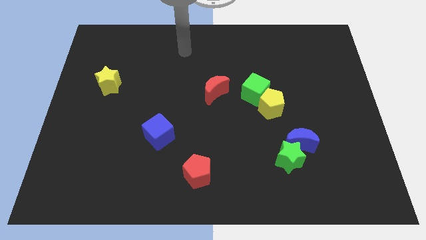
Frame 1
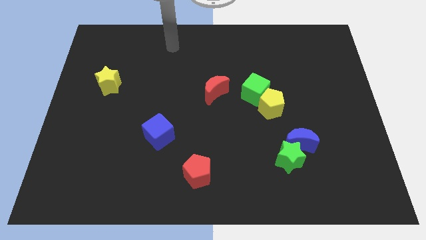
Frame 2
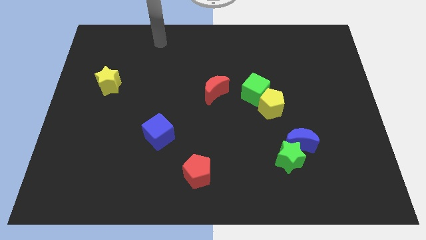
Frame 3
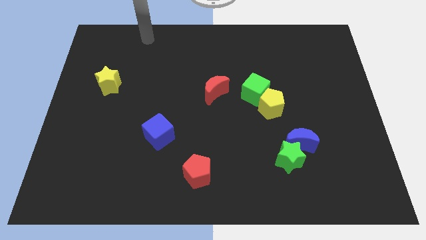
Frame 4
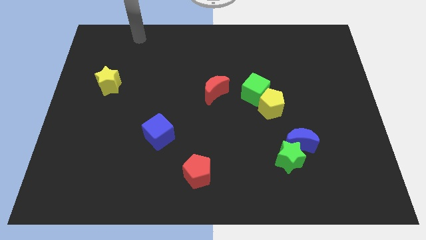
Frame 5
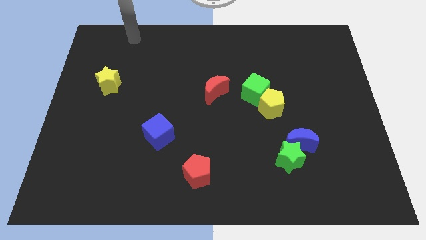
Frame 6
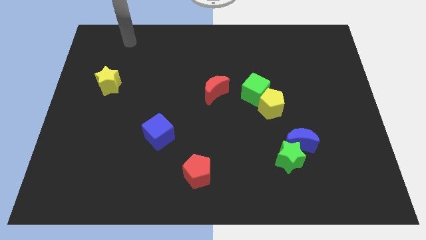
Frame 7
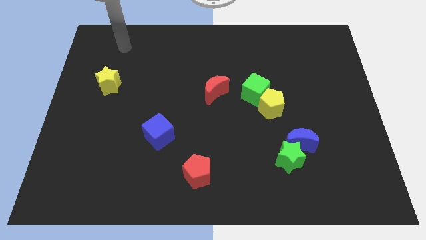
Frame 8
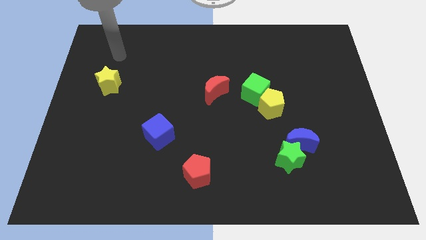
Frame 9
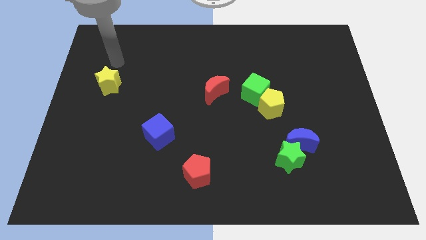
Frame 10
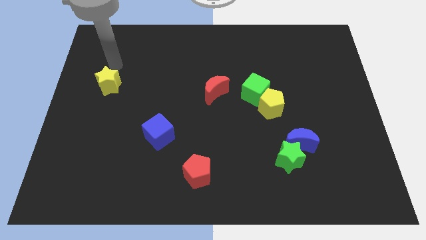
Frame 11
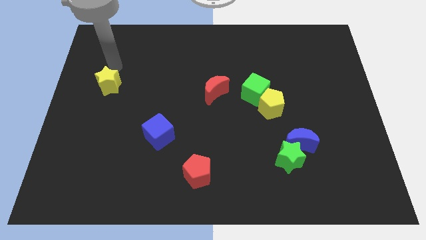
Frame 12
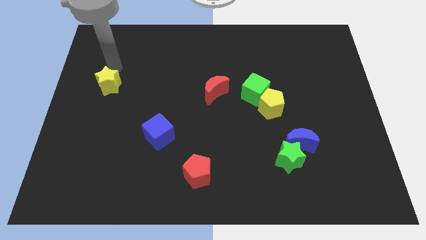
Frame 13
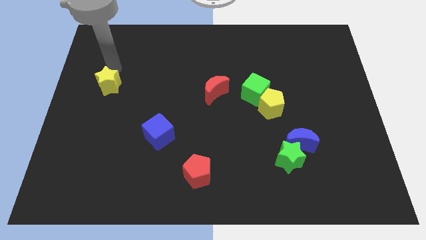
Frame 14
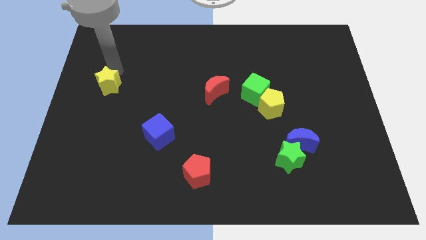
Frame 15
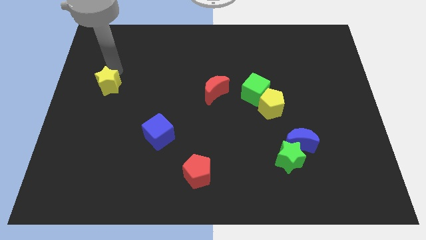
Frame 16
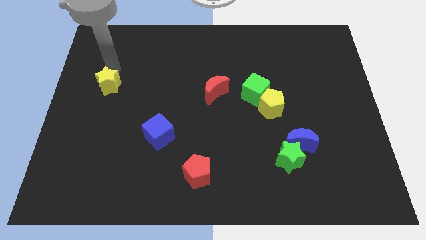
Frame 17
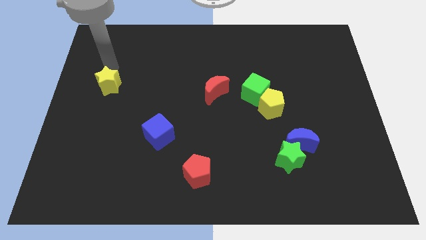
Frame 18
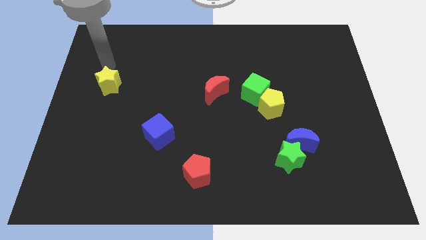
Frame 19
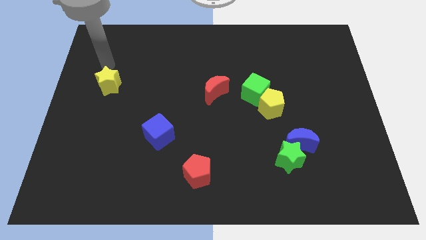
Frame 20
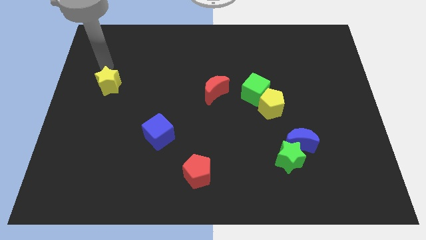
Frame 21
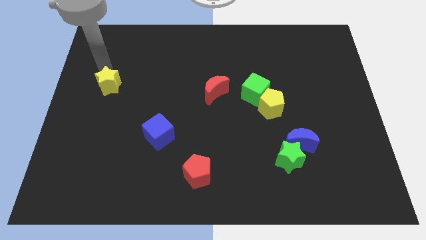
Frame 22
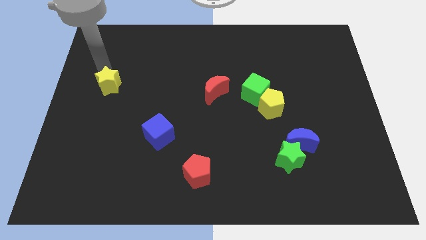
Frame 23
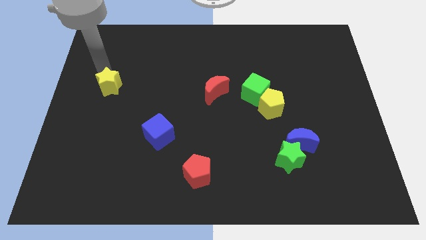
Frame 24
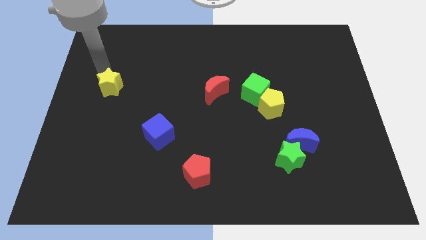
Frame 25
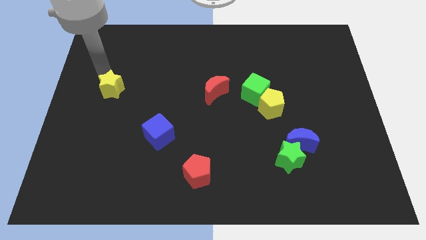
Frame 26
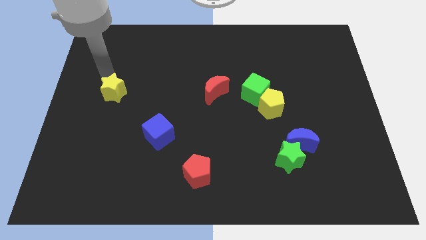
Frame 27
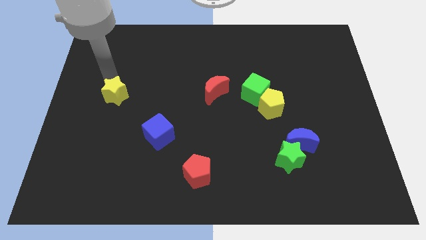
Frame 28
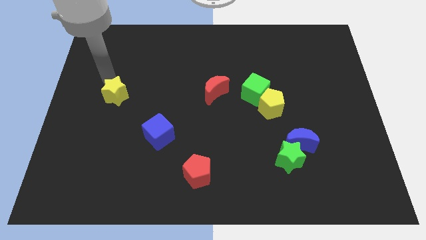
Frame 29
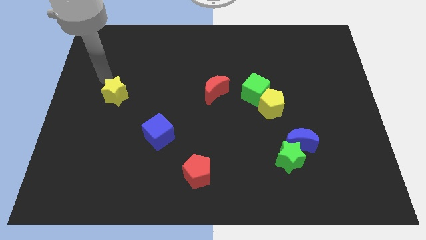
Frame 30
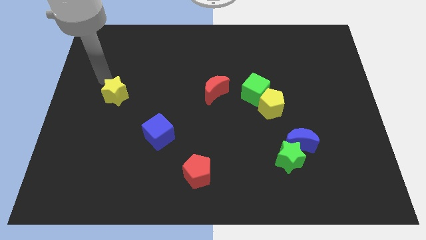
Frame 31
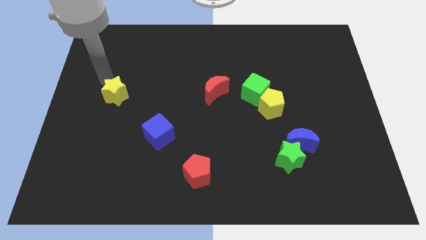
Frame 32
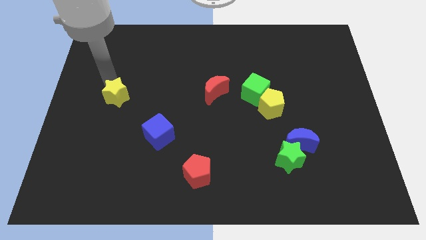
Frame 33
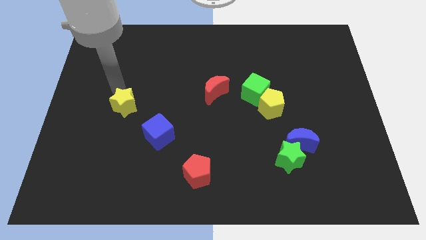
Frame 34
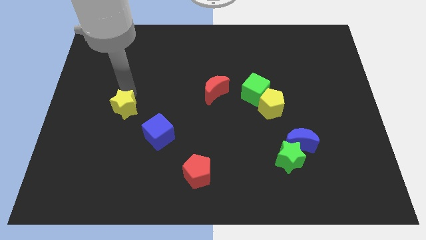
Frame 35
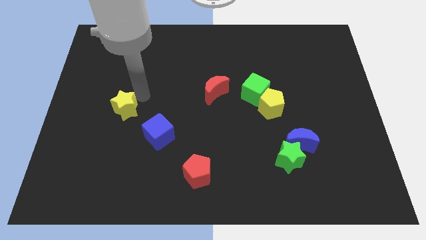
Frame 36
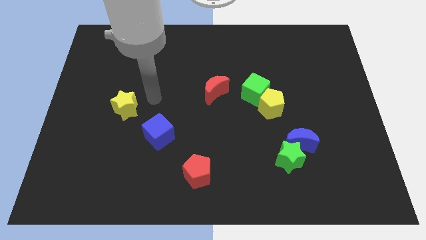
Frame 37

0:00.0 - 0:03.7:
hit the yellow star on its top side

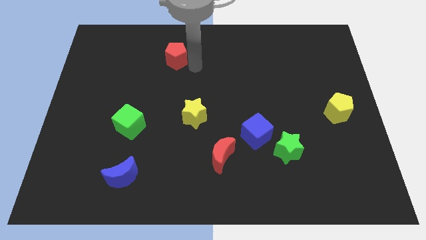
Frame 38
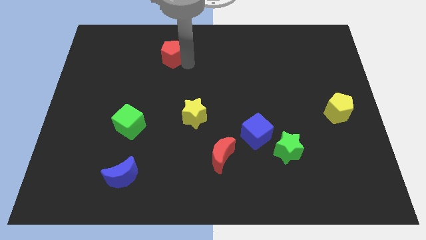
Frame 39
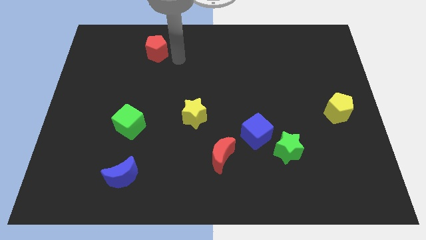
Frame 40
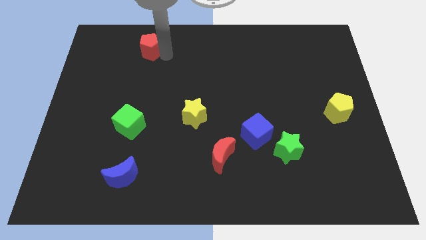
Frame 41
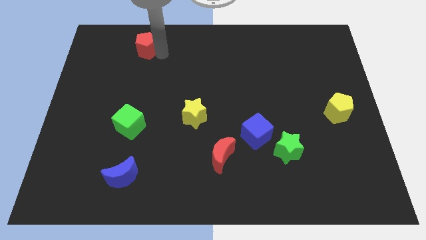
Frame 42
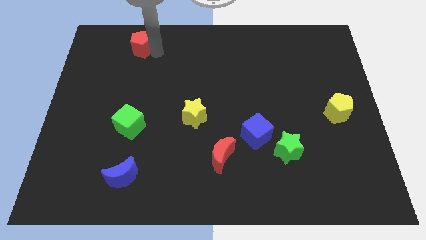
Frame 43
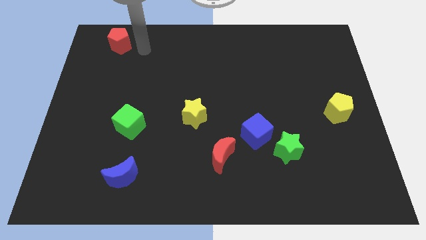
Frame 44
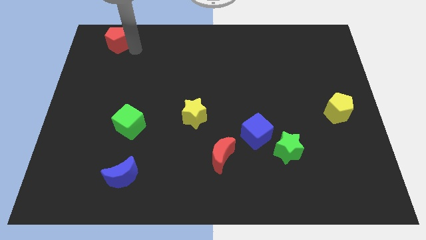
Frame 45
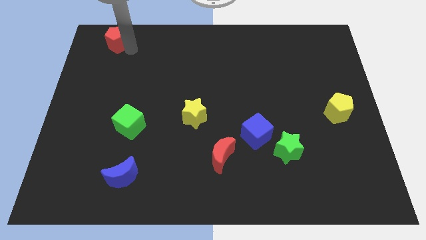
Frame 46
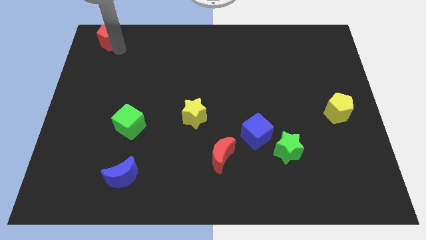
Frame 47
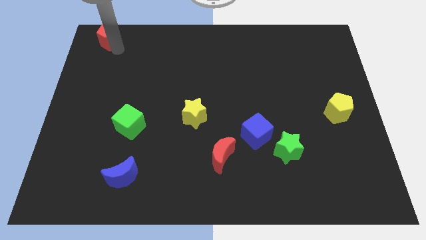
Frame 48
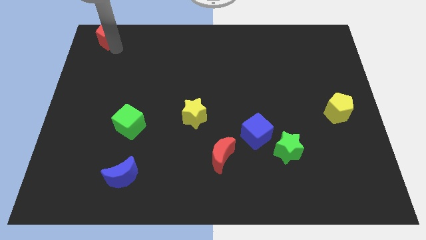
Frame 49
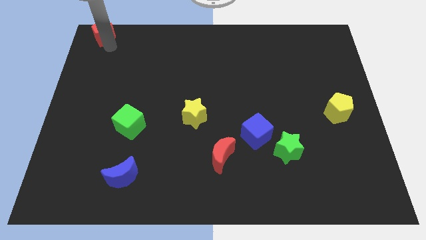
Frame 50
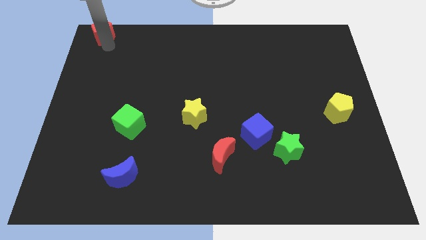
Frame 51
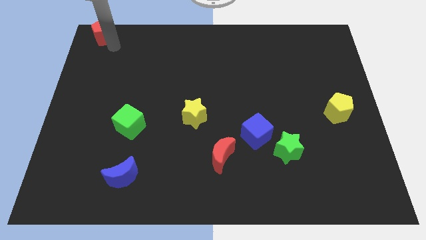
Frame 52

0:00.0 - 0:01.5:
place red pentagon on top left end

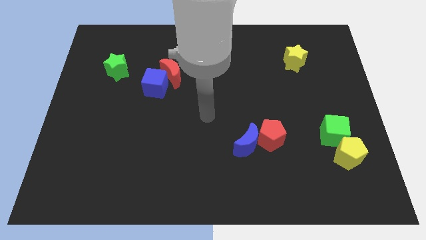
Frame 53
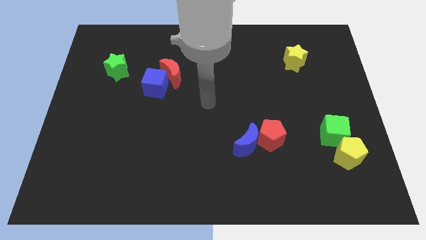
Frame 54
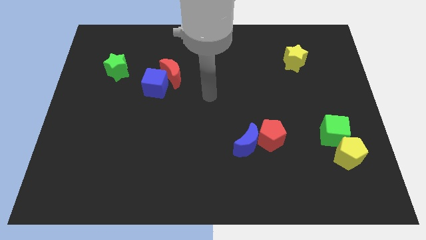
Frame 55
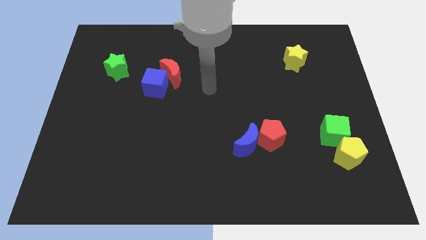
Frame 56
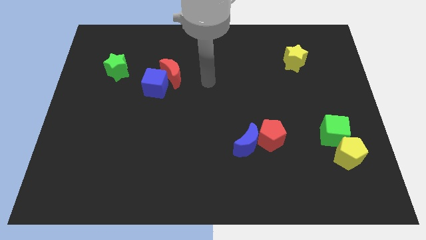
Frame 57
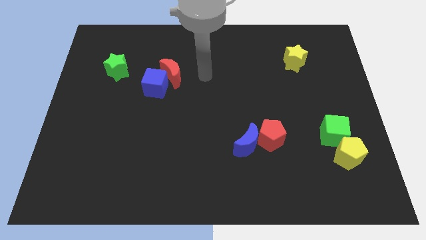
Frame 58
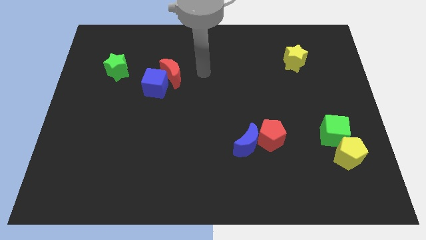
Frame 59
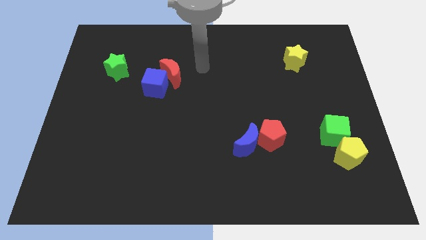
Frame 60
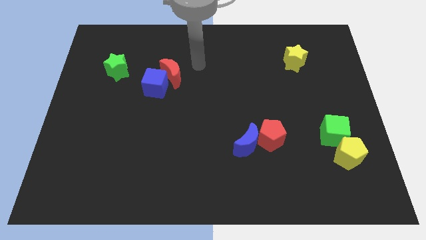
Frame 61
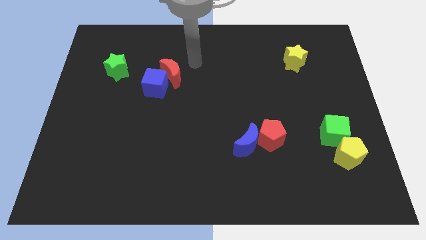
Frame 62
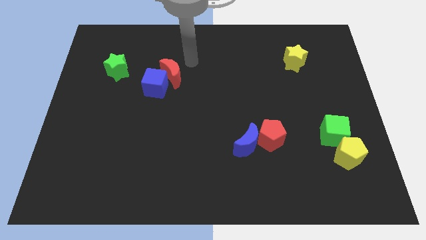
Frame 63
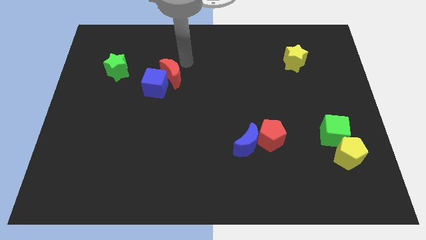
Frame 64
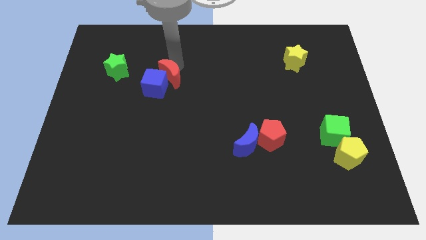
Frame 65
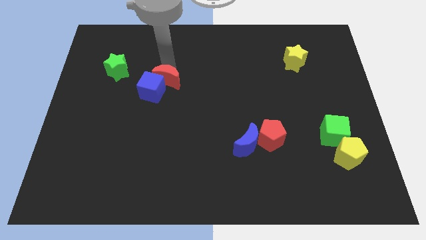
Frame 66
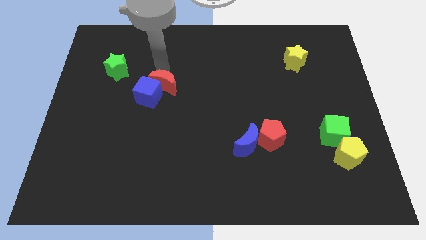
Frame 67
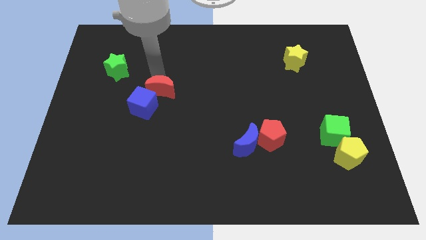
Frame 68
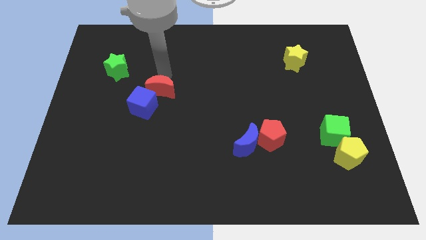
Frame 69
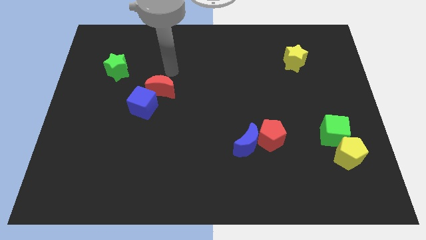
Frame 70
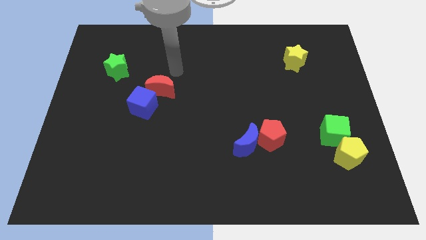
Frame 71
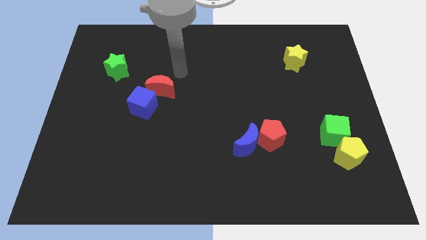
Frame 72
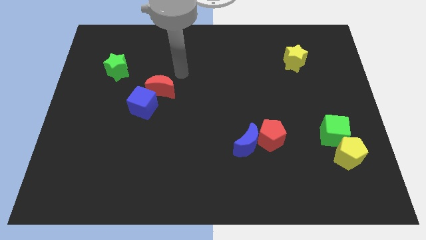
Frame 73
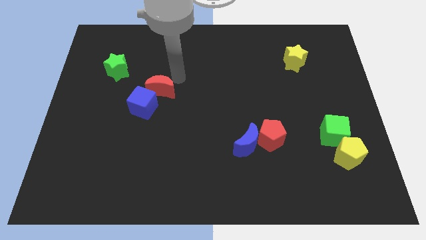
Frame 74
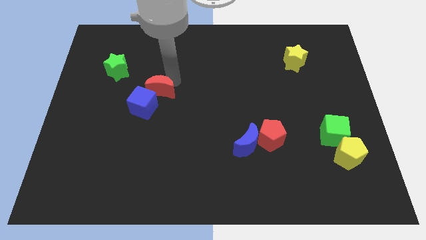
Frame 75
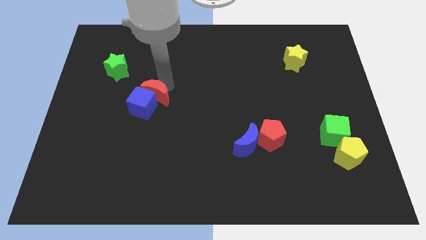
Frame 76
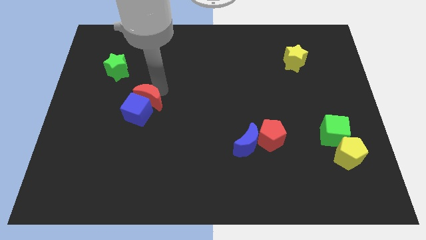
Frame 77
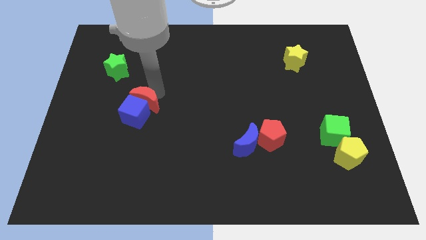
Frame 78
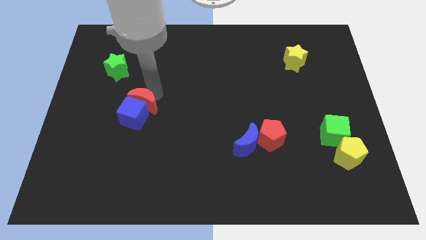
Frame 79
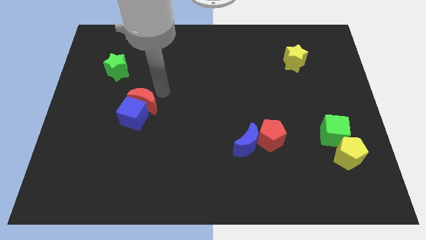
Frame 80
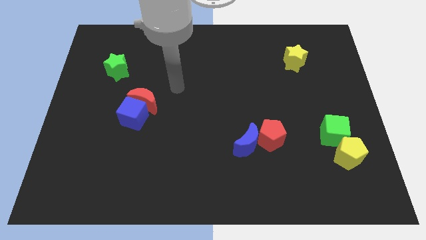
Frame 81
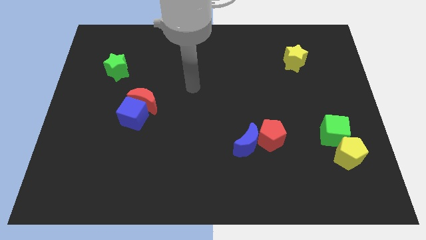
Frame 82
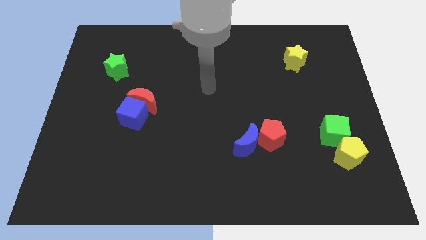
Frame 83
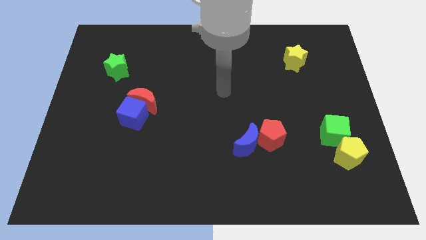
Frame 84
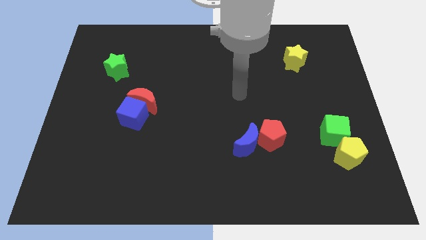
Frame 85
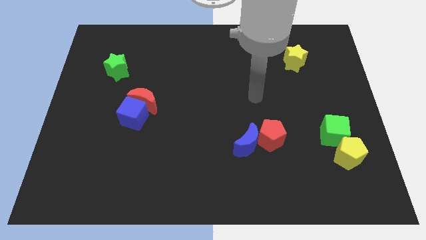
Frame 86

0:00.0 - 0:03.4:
push the red crescent with the blue cube

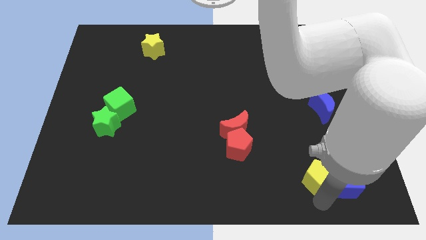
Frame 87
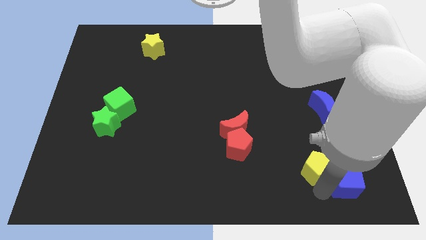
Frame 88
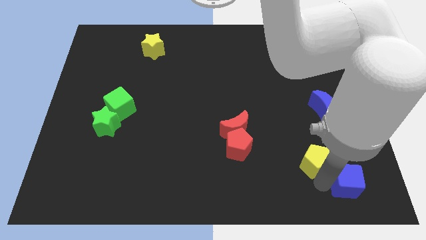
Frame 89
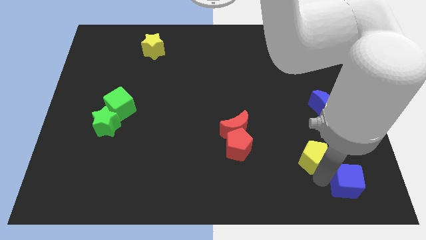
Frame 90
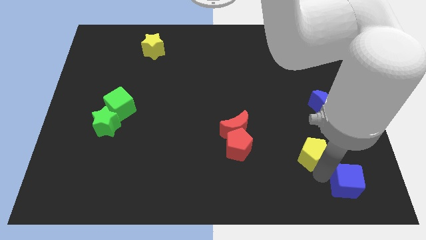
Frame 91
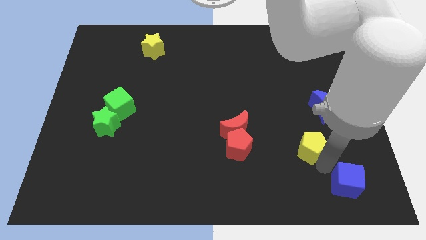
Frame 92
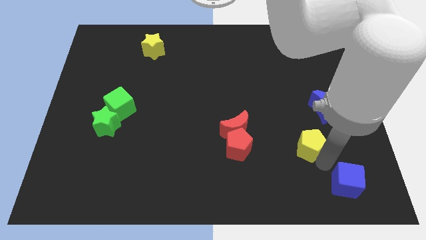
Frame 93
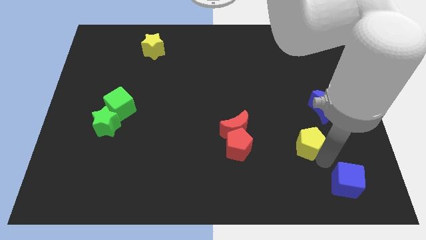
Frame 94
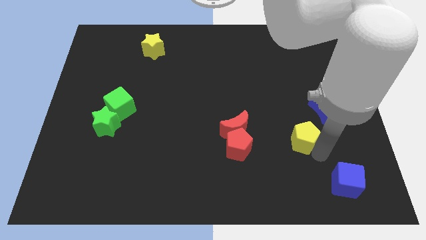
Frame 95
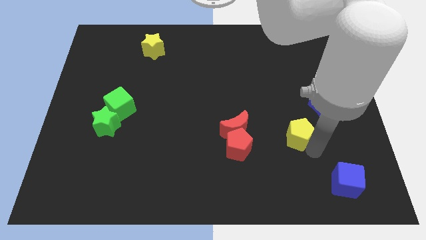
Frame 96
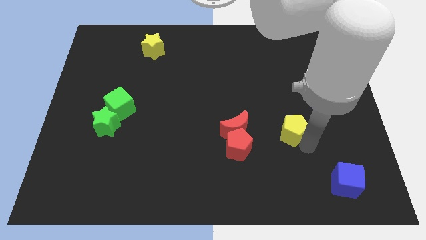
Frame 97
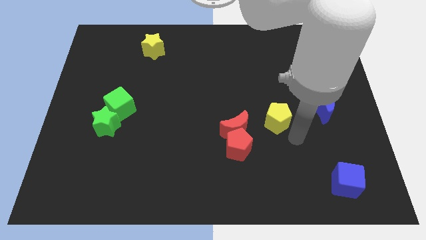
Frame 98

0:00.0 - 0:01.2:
separate the yellow pentagon from the blue cube
